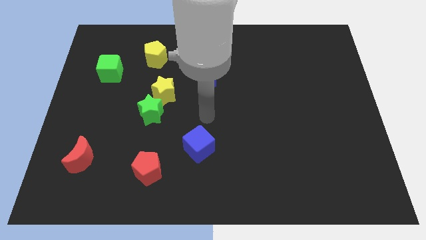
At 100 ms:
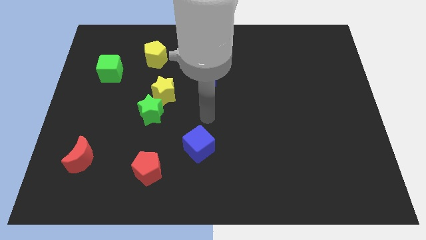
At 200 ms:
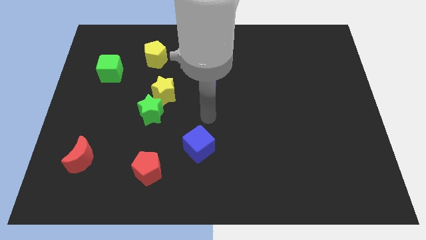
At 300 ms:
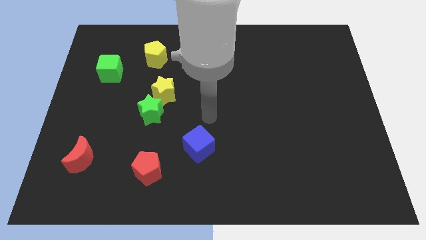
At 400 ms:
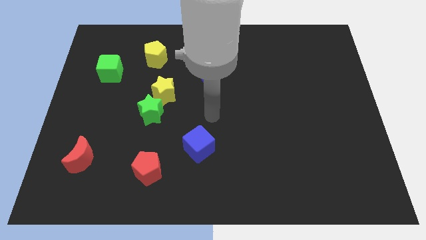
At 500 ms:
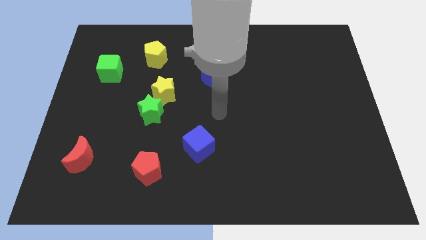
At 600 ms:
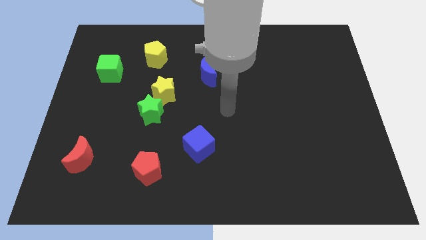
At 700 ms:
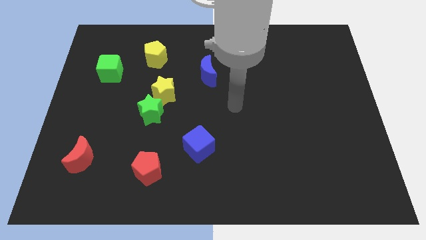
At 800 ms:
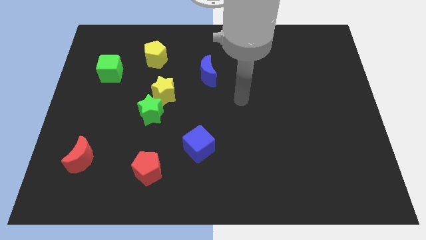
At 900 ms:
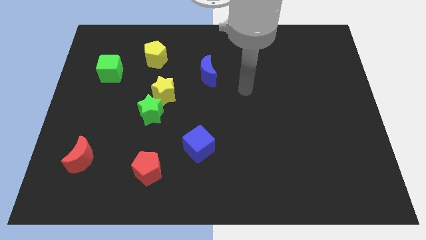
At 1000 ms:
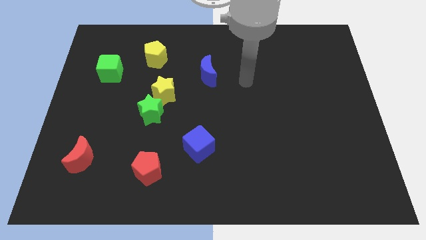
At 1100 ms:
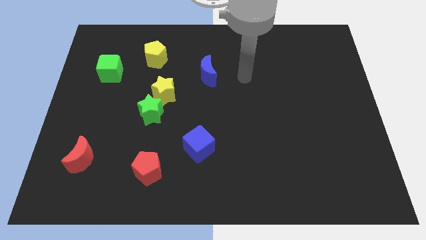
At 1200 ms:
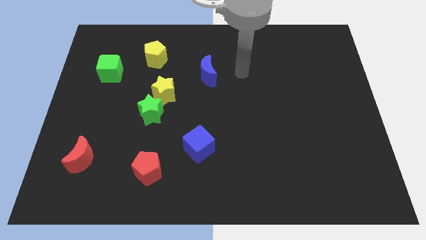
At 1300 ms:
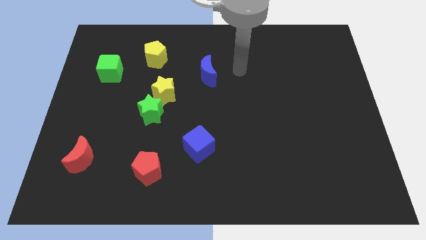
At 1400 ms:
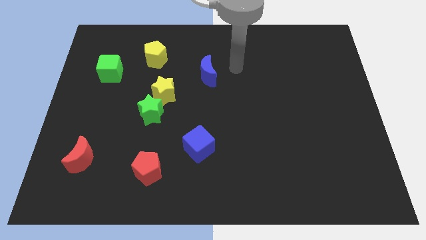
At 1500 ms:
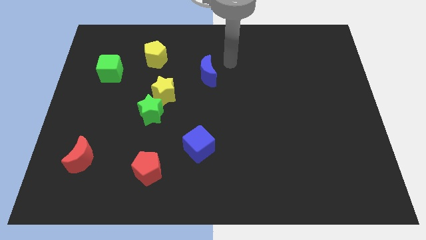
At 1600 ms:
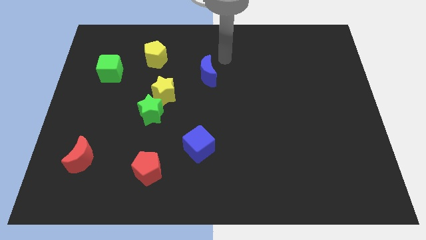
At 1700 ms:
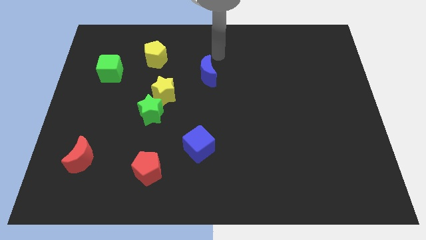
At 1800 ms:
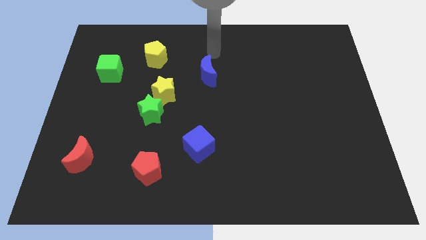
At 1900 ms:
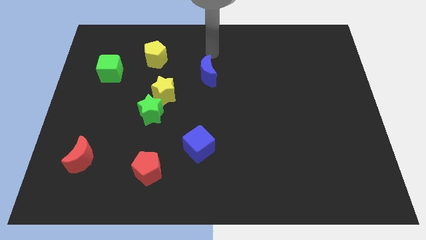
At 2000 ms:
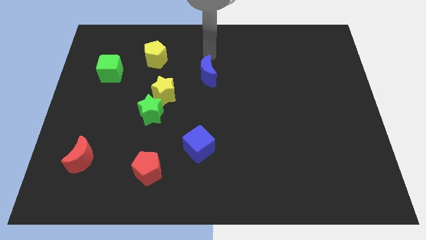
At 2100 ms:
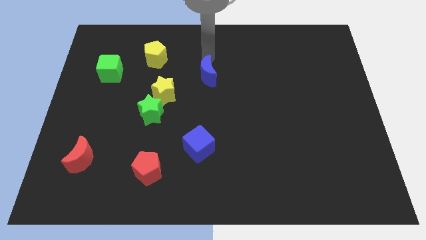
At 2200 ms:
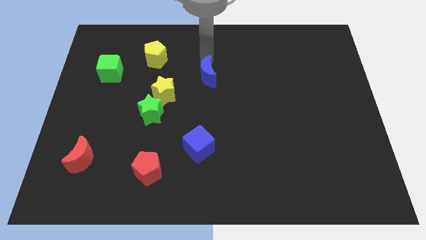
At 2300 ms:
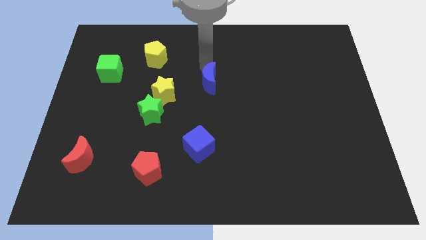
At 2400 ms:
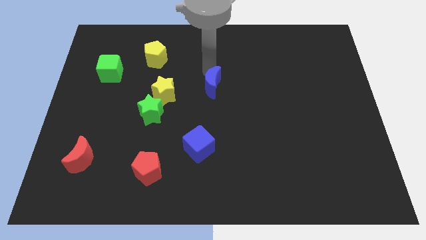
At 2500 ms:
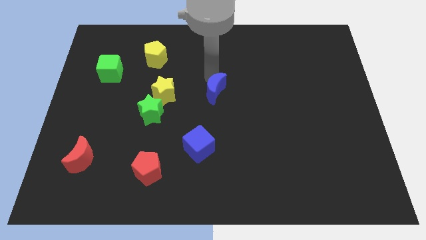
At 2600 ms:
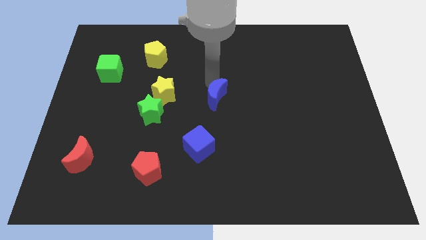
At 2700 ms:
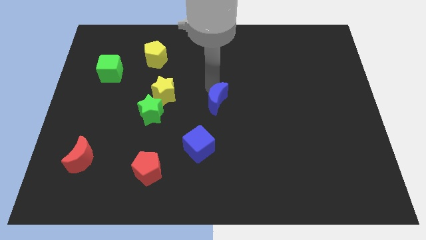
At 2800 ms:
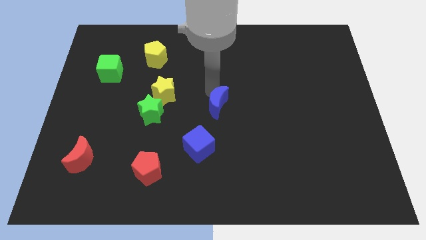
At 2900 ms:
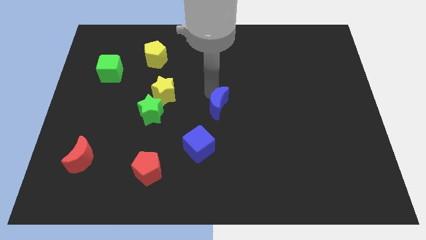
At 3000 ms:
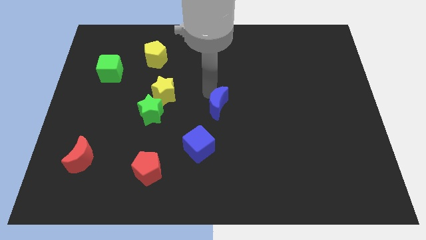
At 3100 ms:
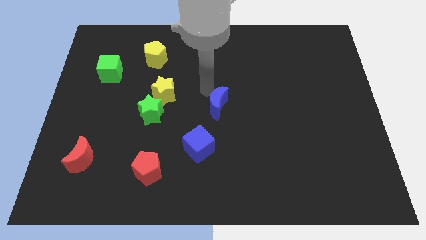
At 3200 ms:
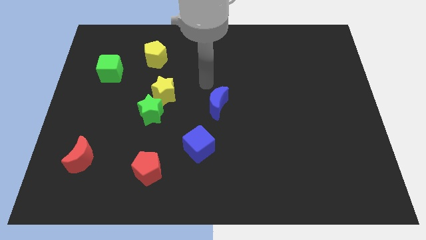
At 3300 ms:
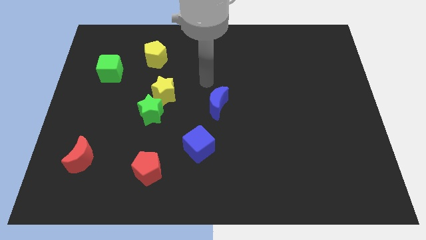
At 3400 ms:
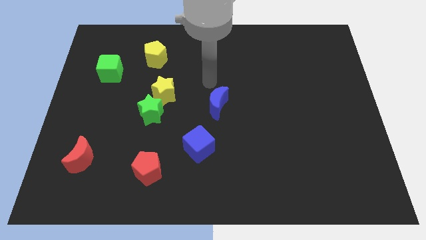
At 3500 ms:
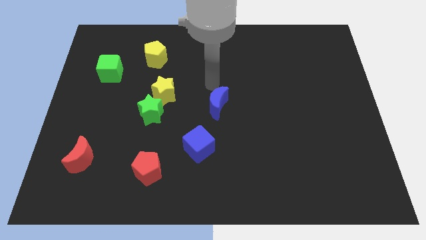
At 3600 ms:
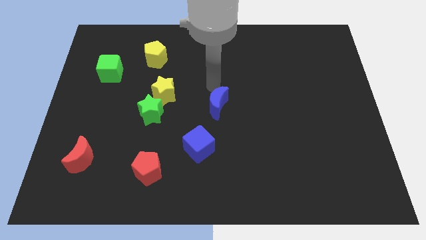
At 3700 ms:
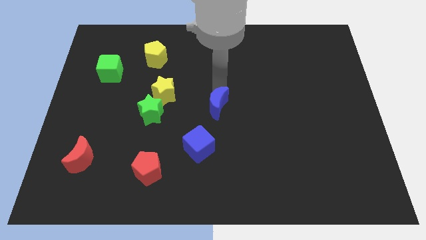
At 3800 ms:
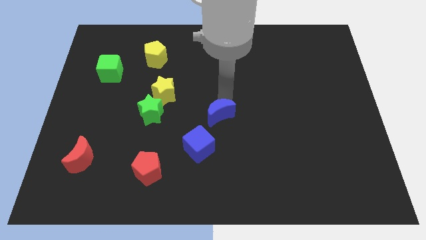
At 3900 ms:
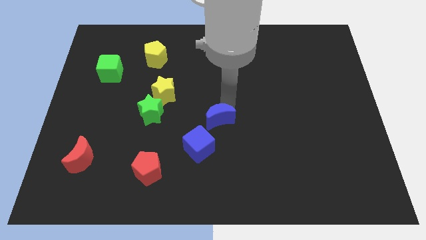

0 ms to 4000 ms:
push the blue moon towards the center of the board

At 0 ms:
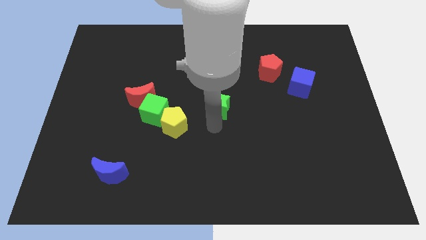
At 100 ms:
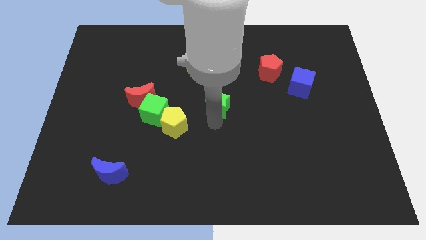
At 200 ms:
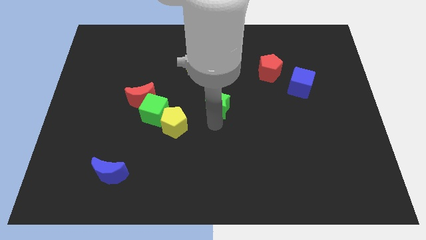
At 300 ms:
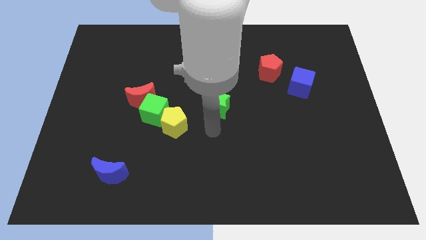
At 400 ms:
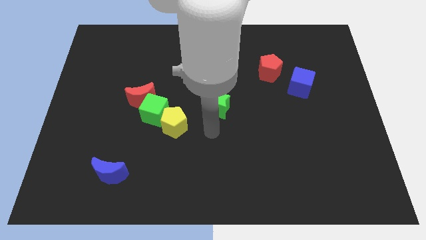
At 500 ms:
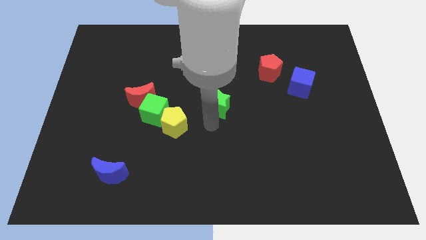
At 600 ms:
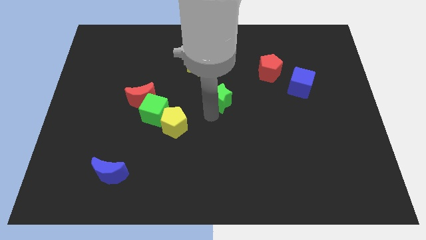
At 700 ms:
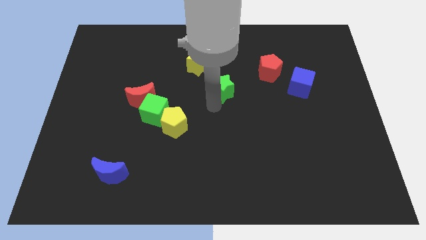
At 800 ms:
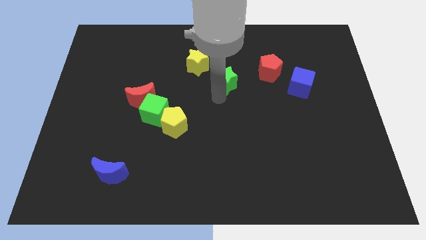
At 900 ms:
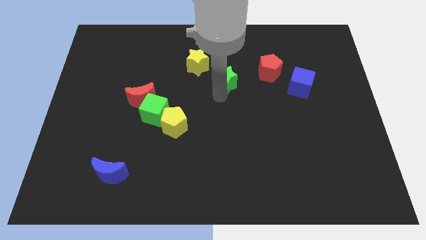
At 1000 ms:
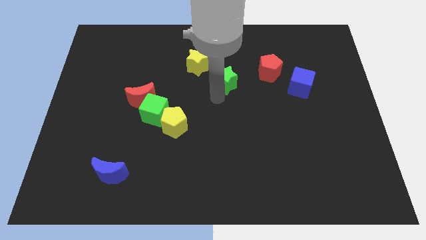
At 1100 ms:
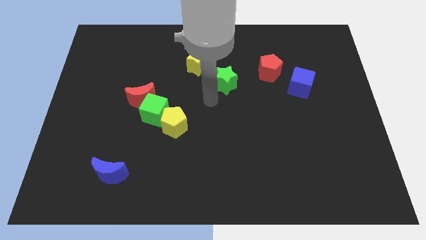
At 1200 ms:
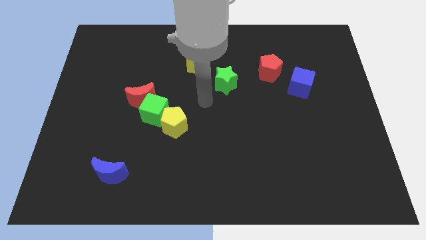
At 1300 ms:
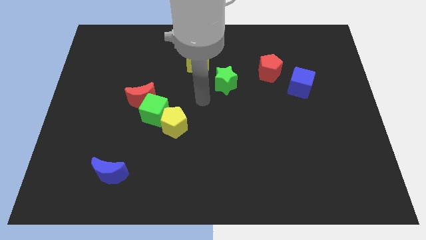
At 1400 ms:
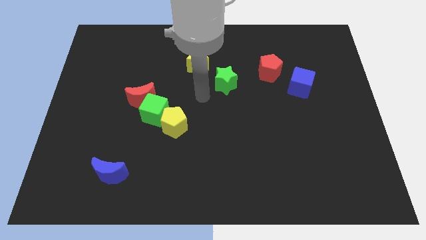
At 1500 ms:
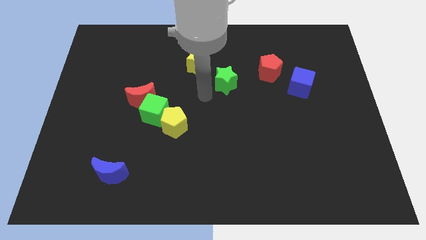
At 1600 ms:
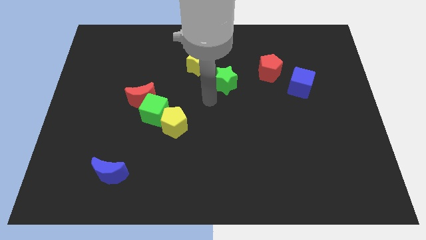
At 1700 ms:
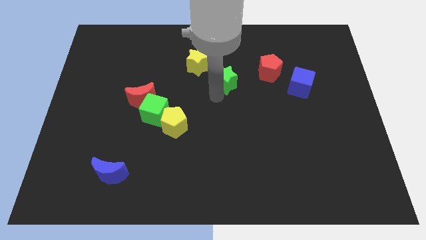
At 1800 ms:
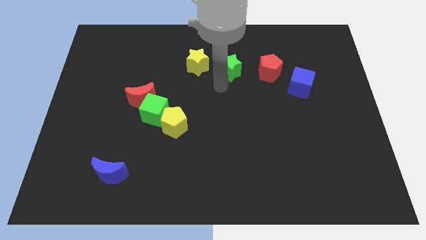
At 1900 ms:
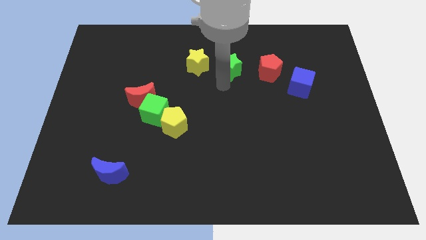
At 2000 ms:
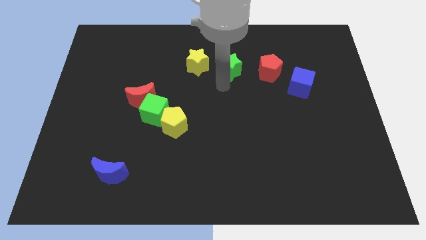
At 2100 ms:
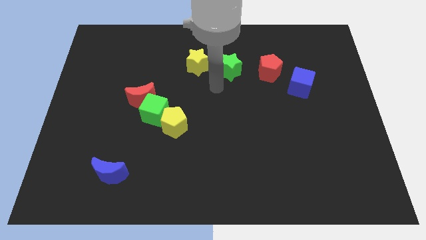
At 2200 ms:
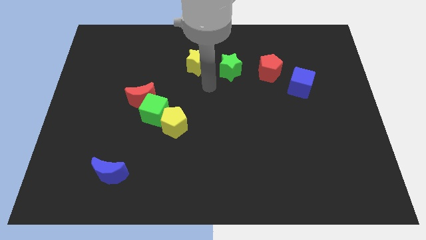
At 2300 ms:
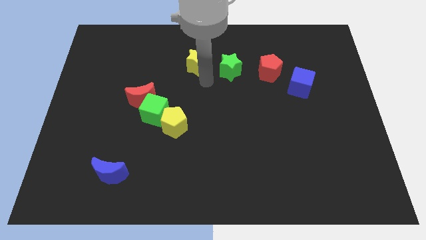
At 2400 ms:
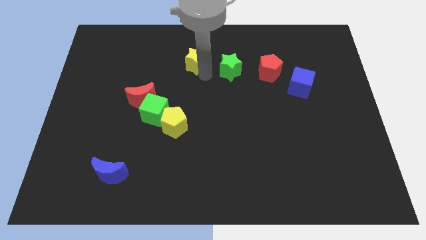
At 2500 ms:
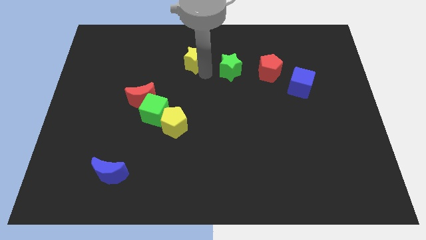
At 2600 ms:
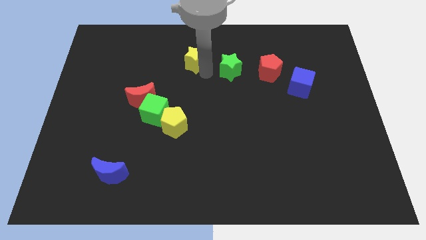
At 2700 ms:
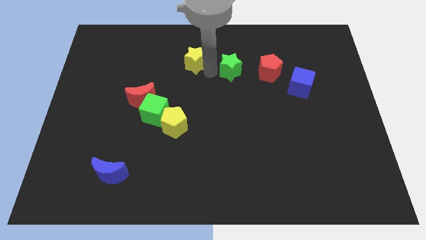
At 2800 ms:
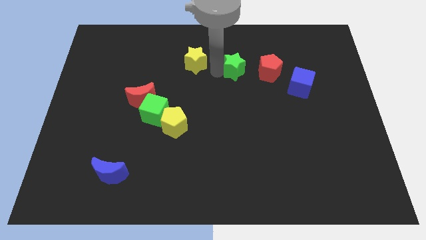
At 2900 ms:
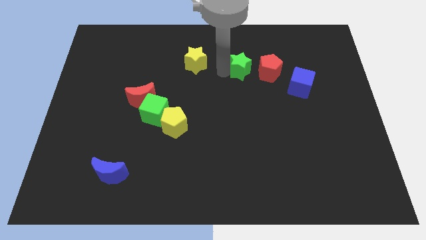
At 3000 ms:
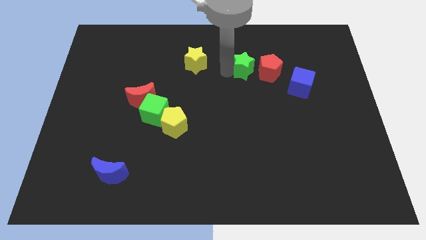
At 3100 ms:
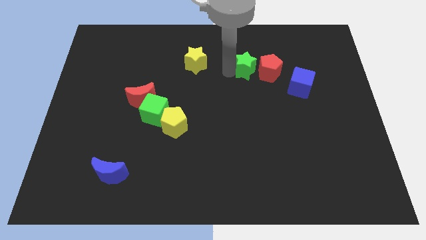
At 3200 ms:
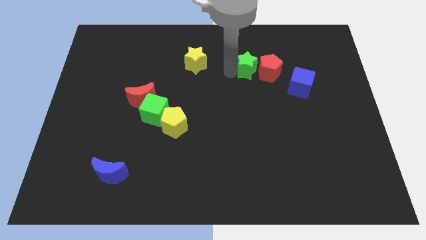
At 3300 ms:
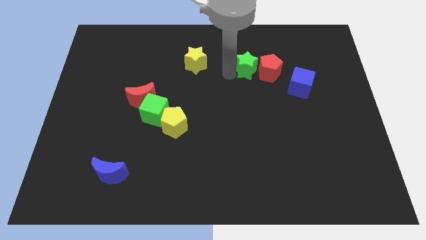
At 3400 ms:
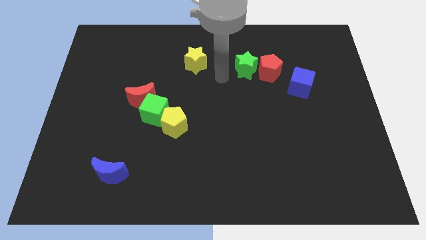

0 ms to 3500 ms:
push the green star left to the red pentagon

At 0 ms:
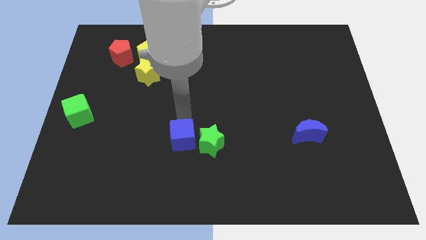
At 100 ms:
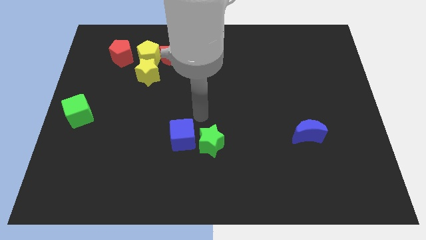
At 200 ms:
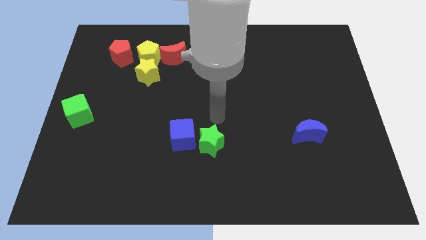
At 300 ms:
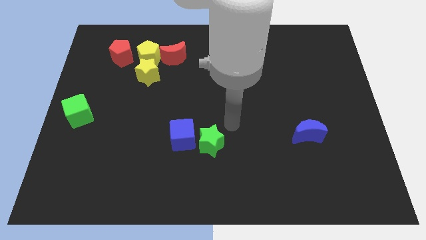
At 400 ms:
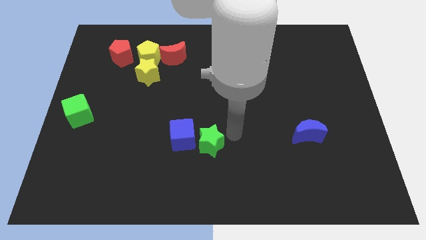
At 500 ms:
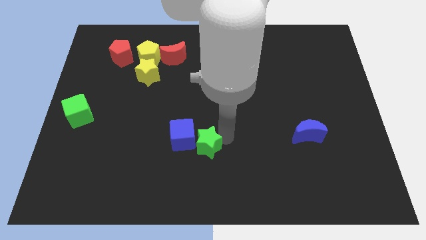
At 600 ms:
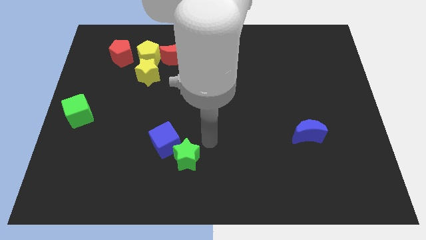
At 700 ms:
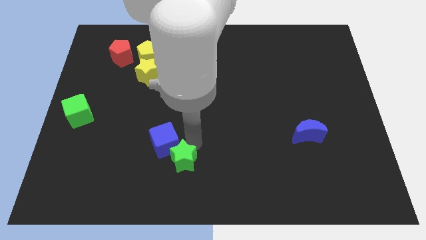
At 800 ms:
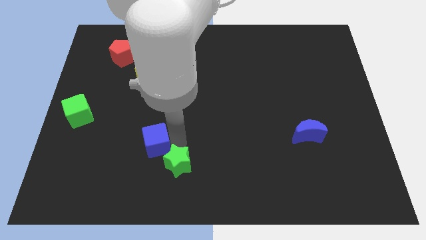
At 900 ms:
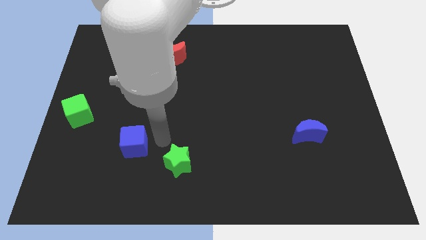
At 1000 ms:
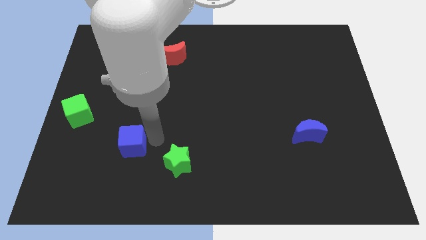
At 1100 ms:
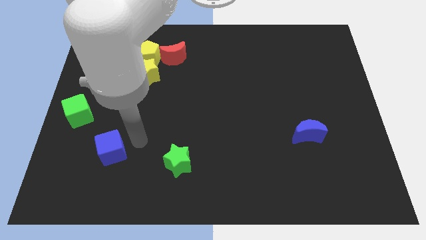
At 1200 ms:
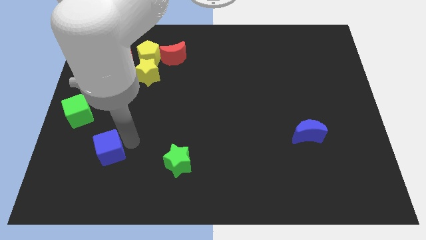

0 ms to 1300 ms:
take the blue cube away from the green star
